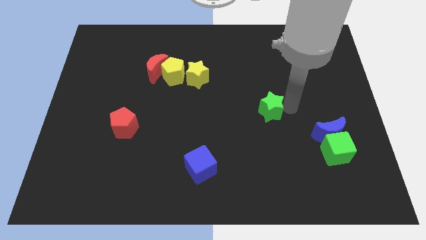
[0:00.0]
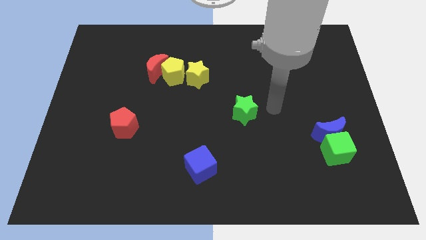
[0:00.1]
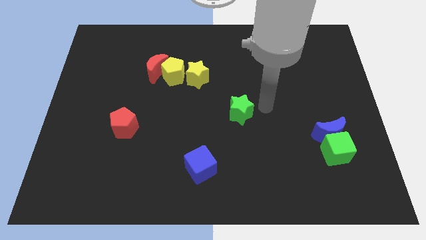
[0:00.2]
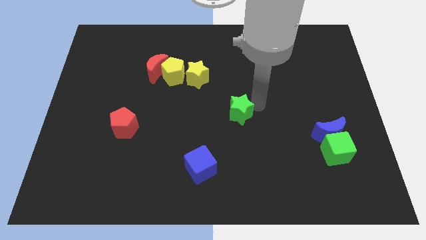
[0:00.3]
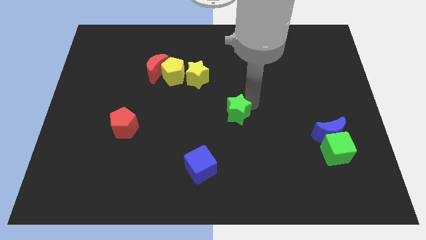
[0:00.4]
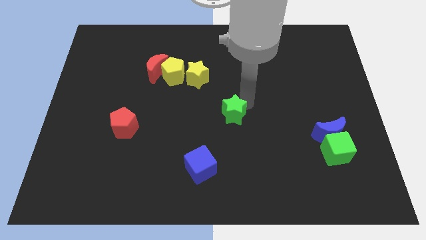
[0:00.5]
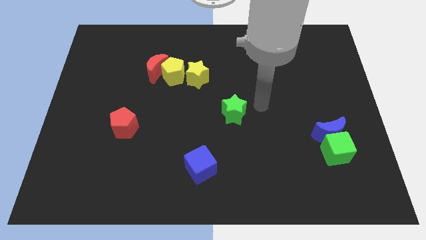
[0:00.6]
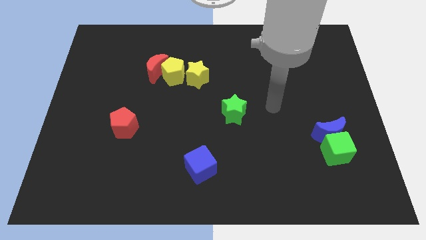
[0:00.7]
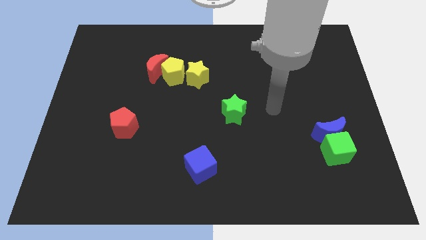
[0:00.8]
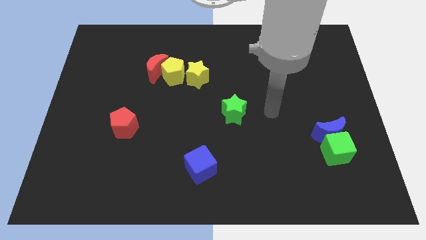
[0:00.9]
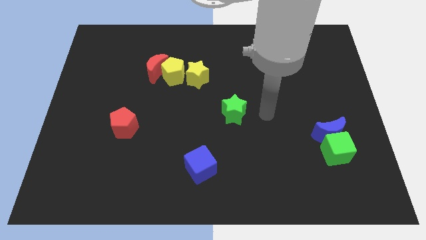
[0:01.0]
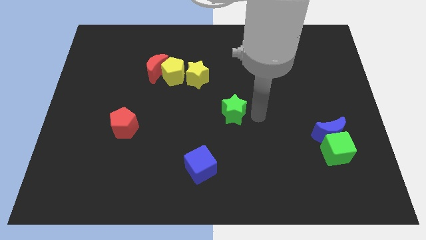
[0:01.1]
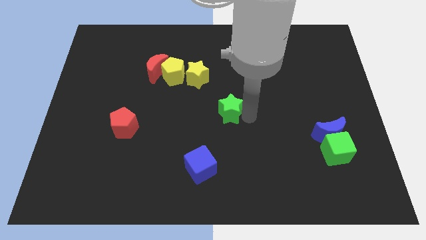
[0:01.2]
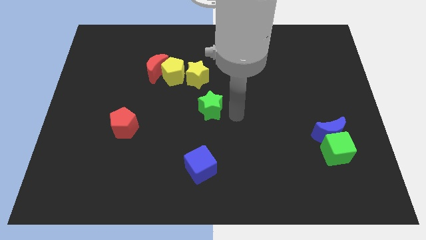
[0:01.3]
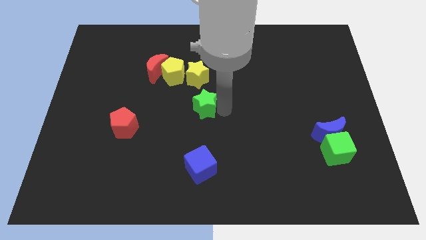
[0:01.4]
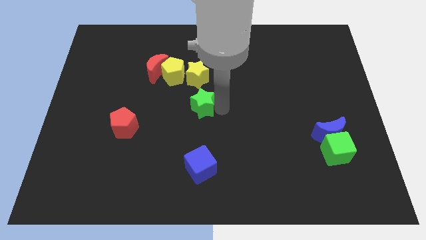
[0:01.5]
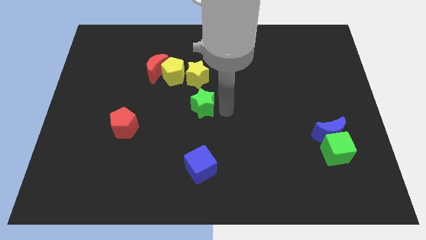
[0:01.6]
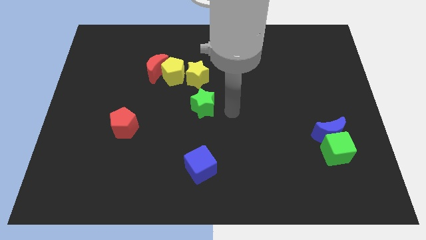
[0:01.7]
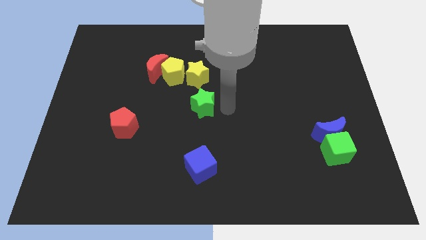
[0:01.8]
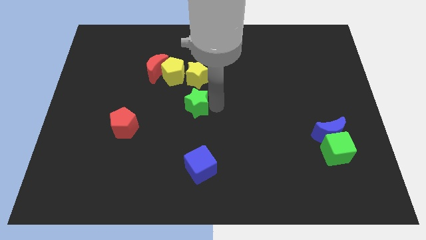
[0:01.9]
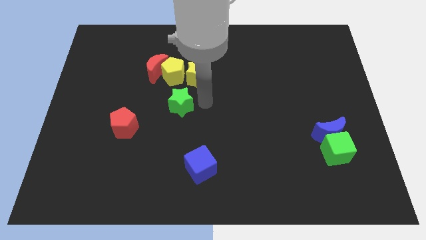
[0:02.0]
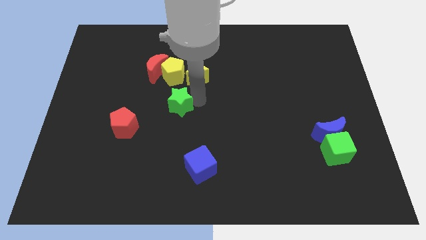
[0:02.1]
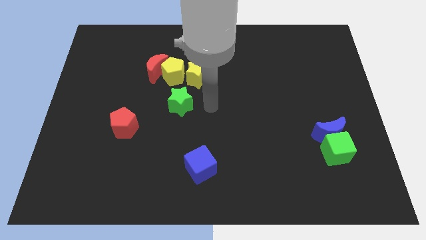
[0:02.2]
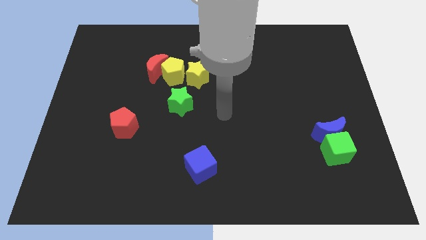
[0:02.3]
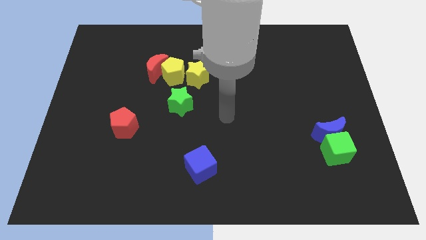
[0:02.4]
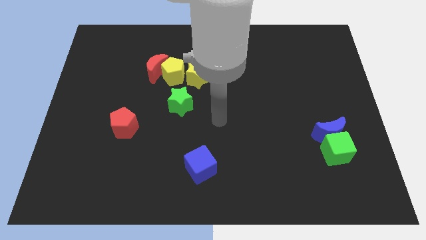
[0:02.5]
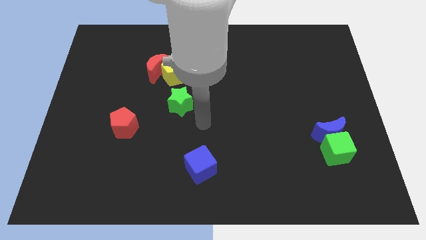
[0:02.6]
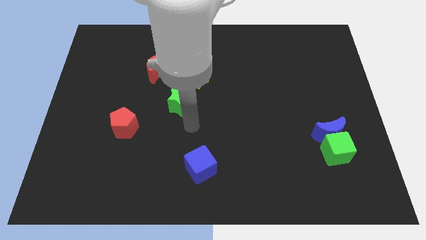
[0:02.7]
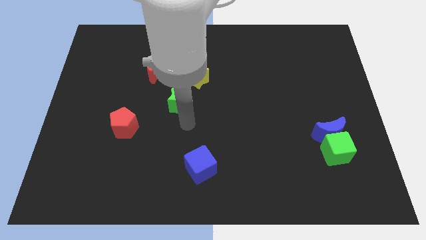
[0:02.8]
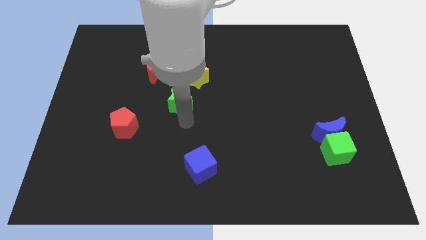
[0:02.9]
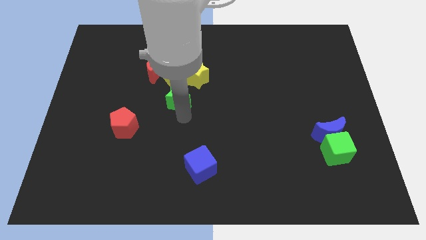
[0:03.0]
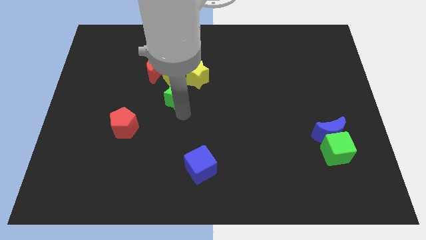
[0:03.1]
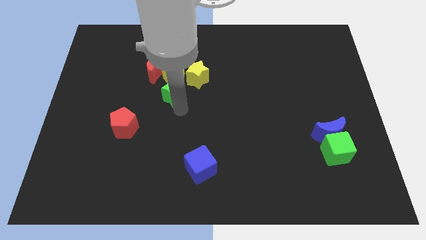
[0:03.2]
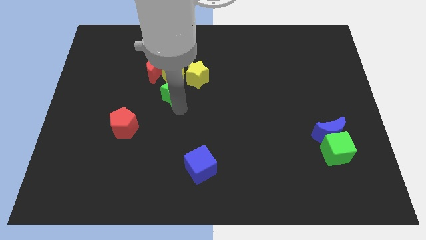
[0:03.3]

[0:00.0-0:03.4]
push the green star to the bottom of the yellow pentagon

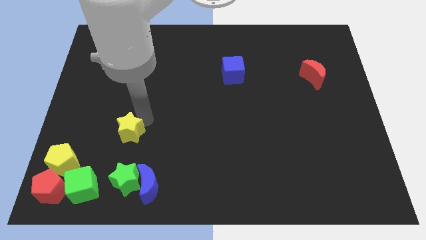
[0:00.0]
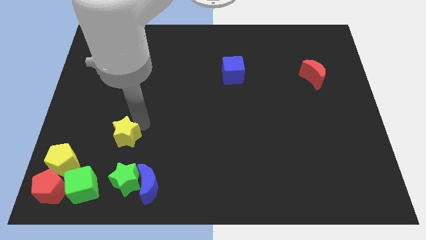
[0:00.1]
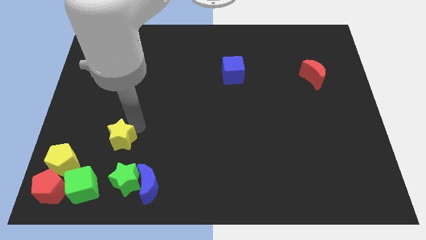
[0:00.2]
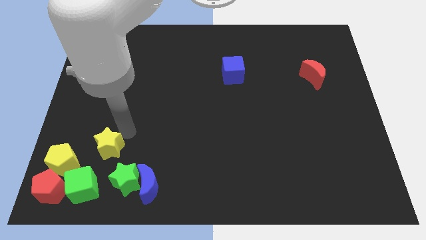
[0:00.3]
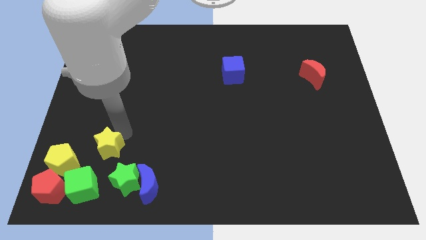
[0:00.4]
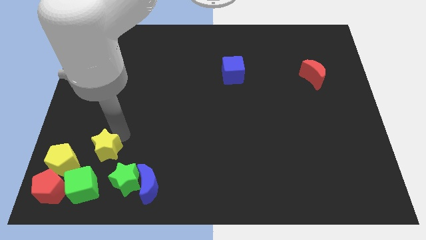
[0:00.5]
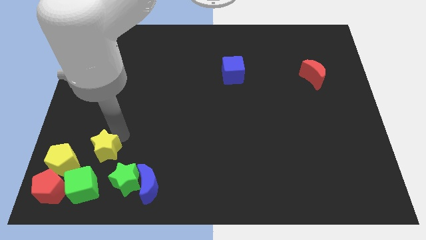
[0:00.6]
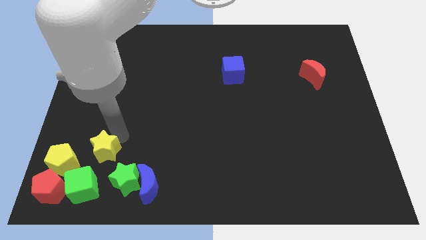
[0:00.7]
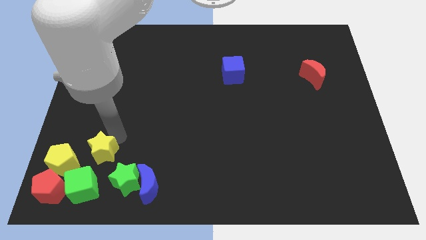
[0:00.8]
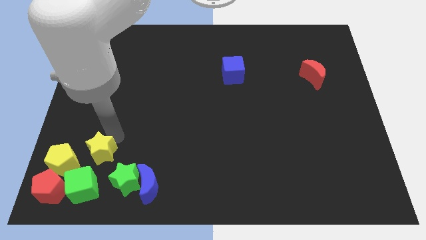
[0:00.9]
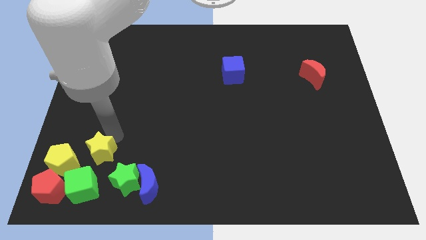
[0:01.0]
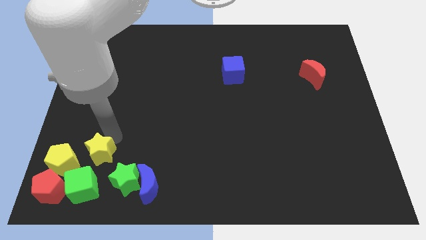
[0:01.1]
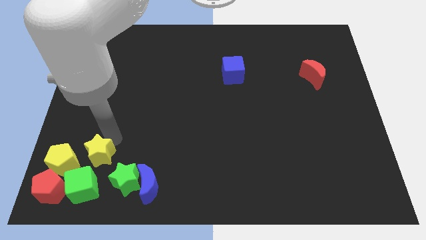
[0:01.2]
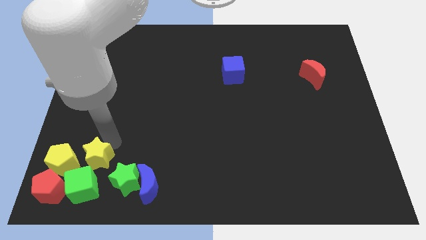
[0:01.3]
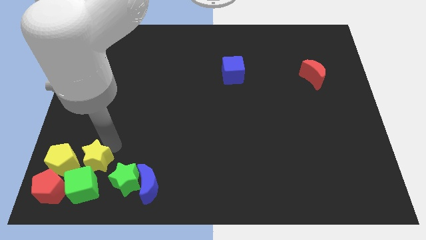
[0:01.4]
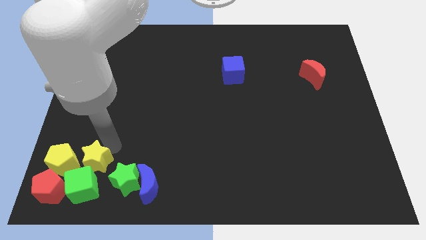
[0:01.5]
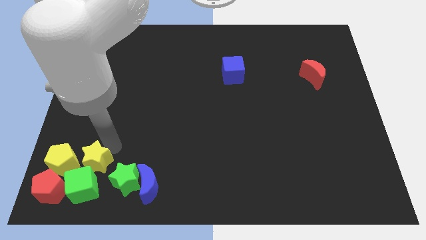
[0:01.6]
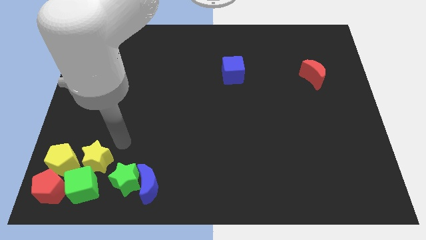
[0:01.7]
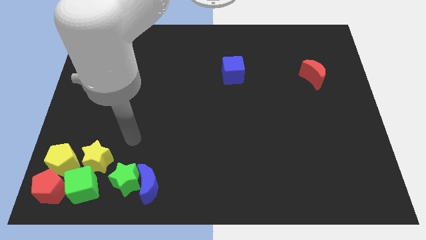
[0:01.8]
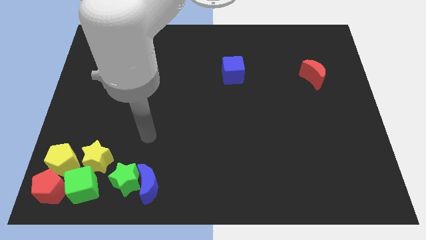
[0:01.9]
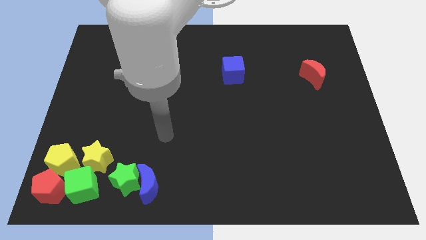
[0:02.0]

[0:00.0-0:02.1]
put the yellow star at the top side of the green cube

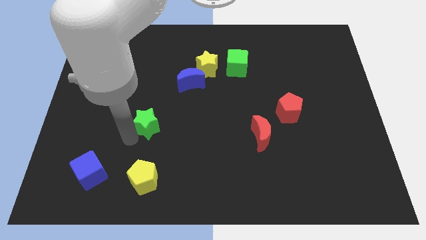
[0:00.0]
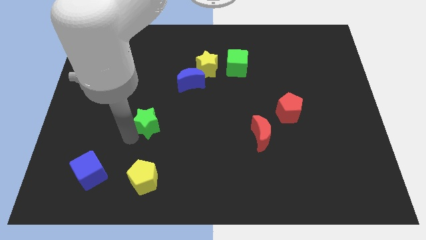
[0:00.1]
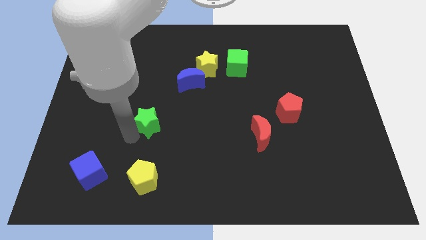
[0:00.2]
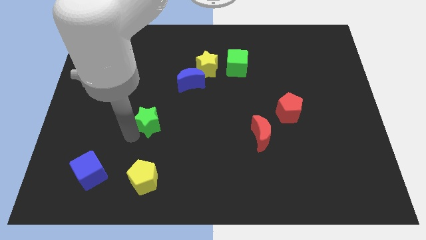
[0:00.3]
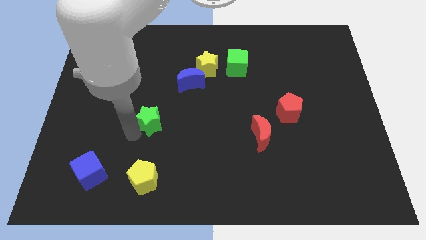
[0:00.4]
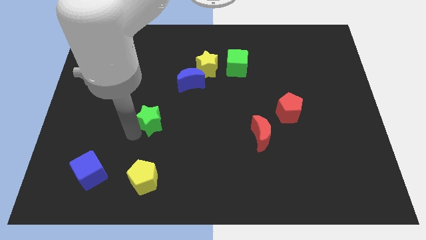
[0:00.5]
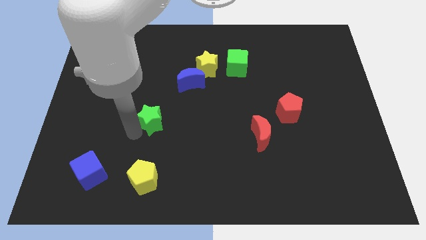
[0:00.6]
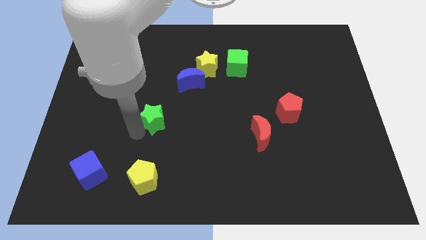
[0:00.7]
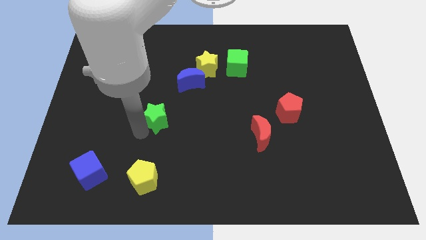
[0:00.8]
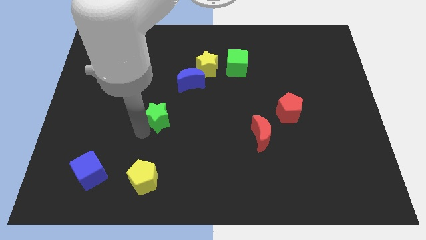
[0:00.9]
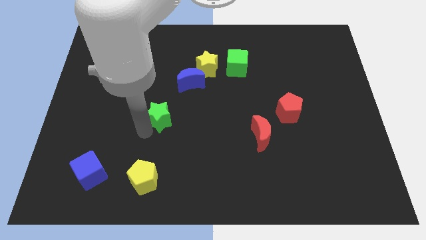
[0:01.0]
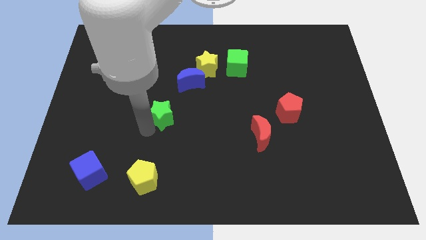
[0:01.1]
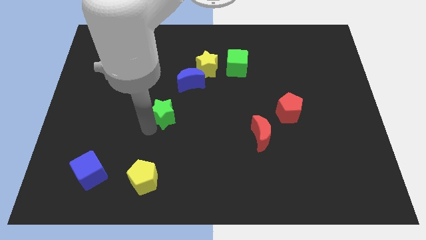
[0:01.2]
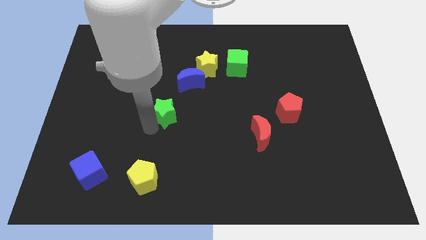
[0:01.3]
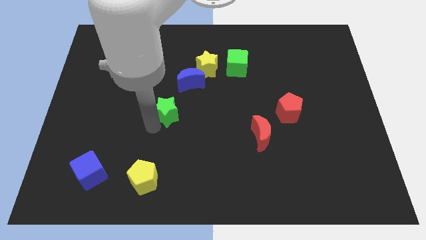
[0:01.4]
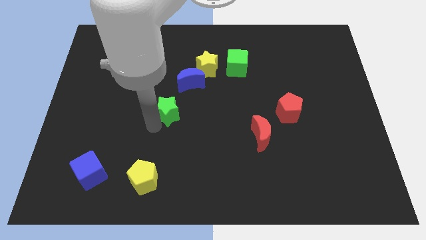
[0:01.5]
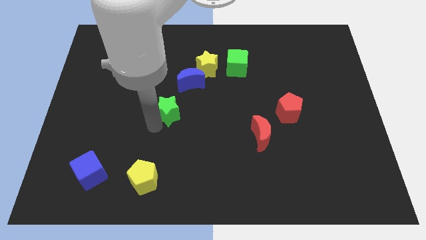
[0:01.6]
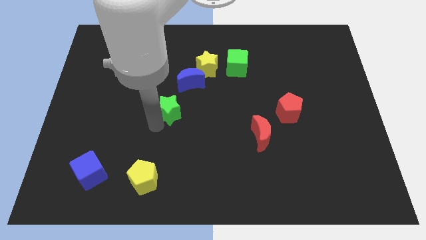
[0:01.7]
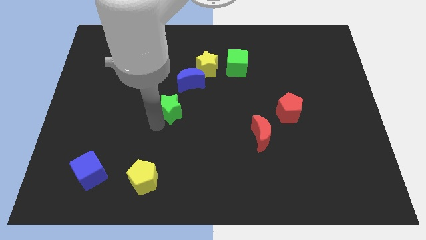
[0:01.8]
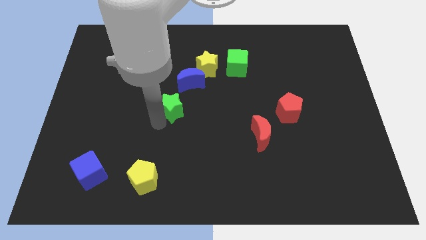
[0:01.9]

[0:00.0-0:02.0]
drag the green star towards the blue crescent

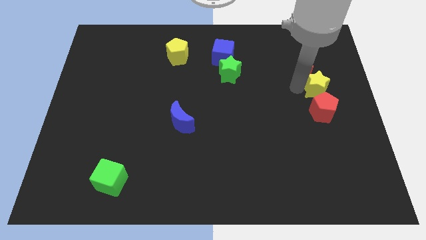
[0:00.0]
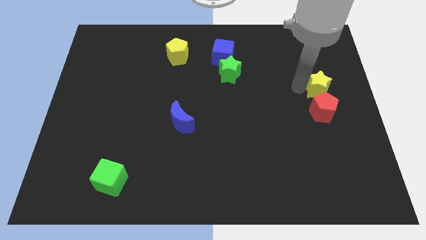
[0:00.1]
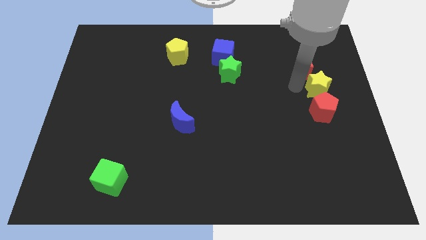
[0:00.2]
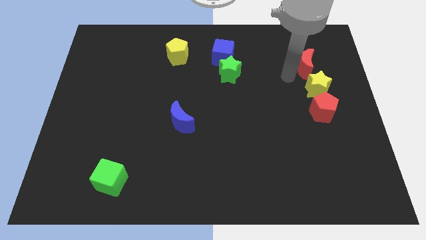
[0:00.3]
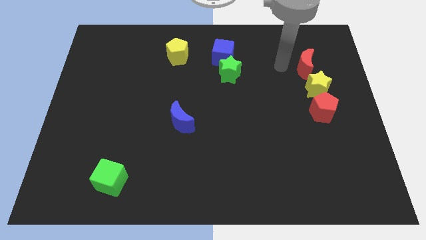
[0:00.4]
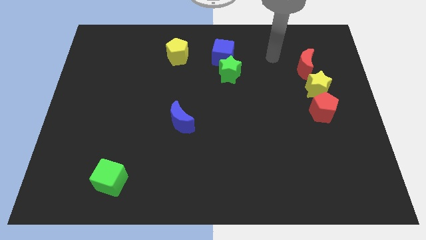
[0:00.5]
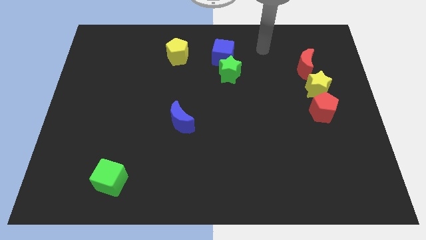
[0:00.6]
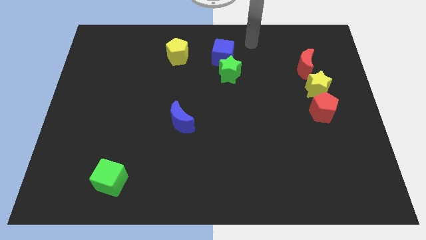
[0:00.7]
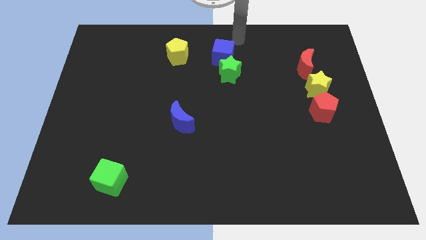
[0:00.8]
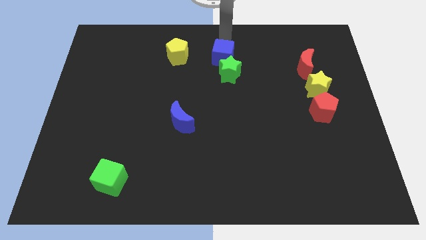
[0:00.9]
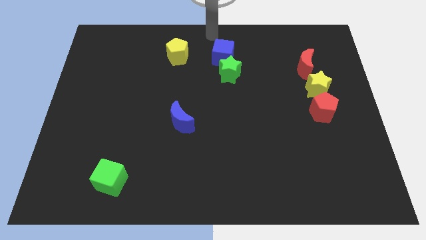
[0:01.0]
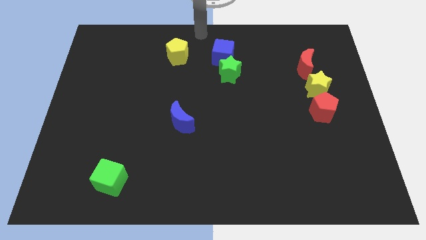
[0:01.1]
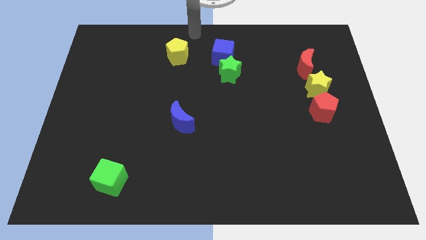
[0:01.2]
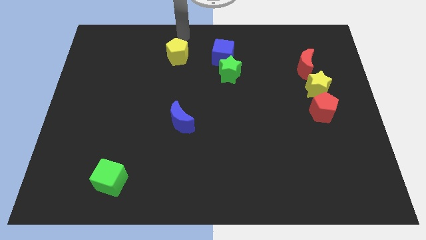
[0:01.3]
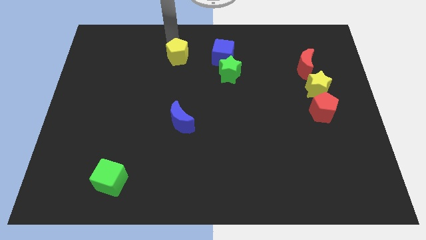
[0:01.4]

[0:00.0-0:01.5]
move your arm away from the yellow star
